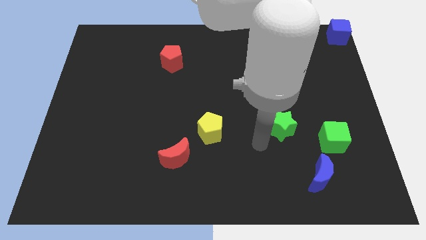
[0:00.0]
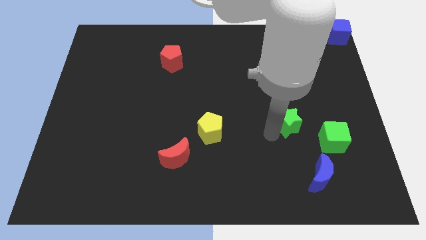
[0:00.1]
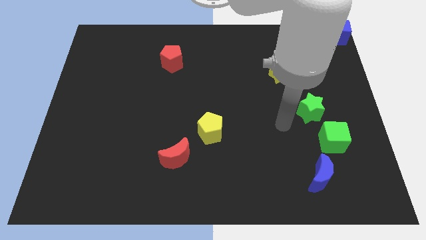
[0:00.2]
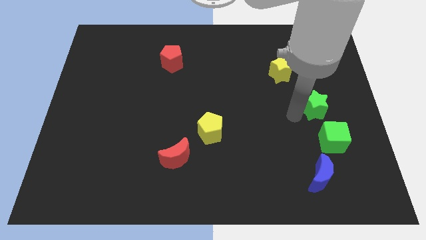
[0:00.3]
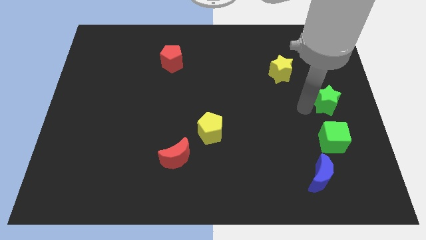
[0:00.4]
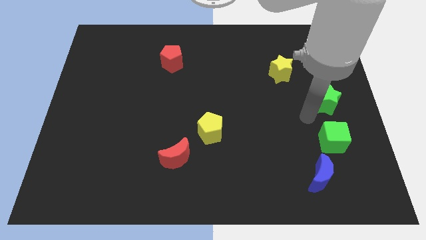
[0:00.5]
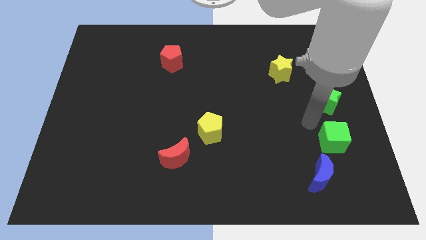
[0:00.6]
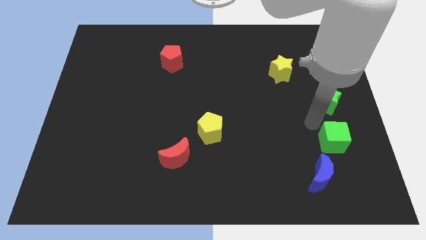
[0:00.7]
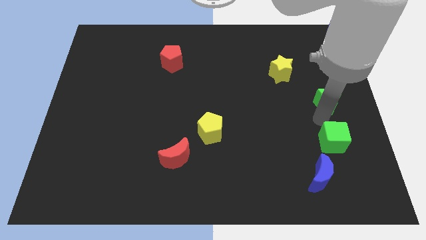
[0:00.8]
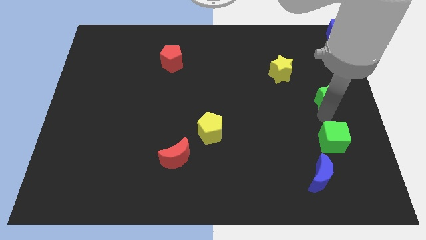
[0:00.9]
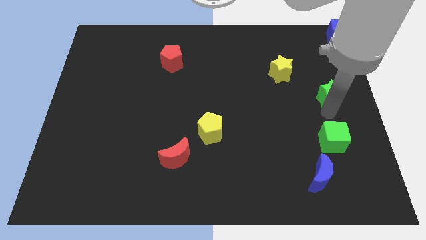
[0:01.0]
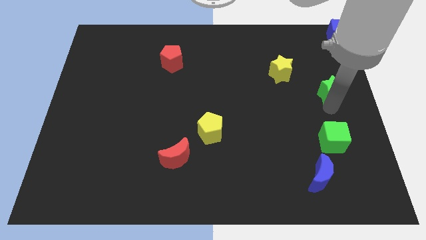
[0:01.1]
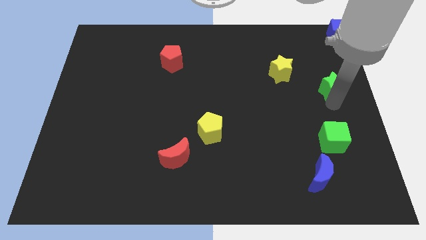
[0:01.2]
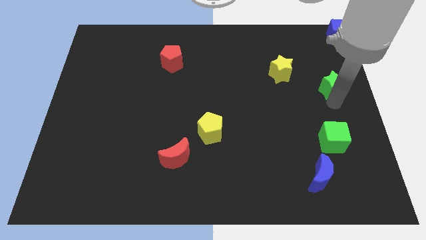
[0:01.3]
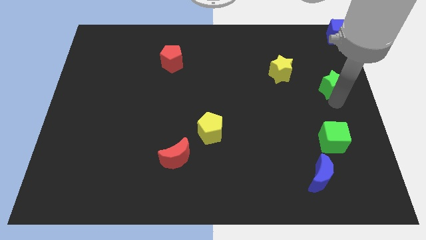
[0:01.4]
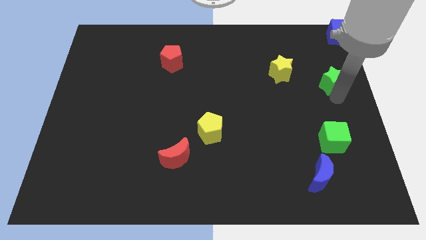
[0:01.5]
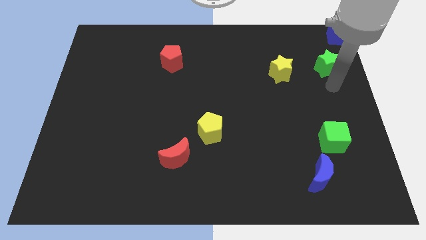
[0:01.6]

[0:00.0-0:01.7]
push the green star to the right side of the yellow star

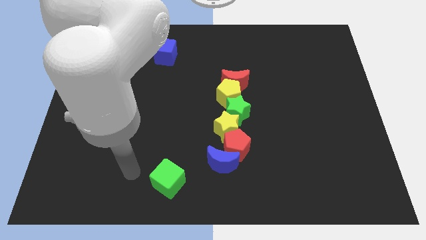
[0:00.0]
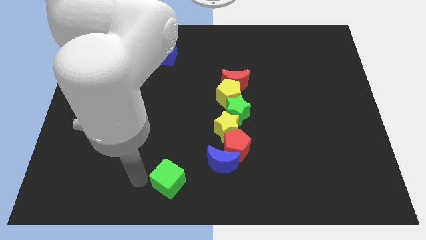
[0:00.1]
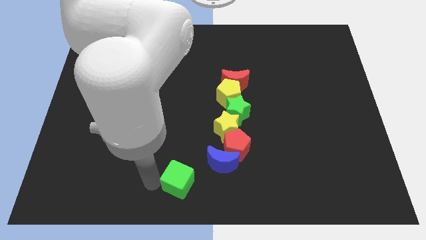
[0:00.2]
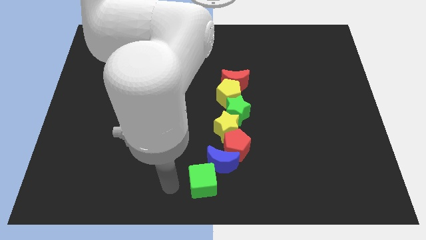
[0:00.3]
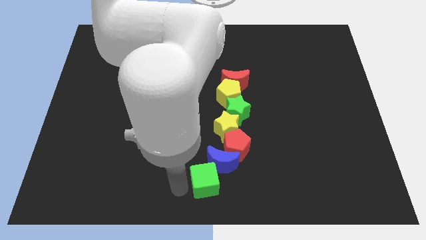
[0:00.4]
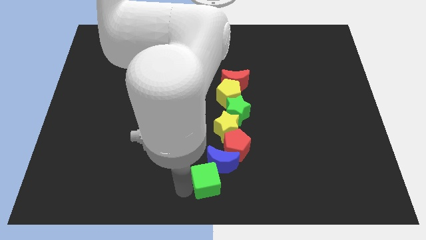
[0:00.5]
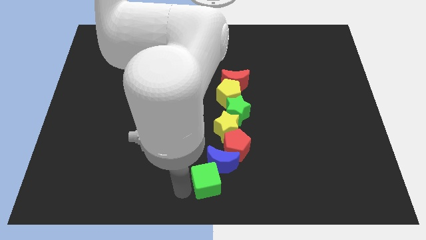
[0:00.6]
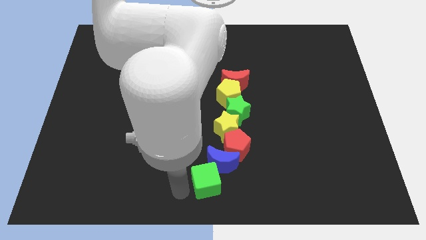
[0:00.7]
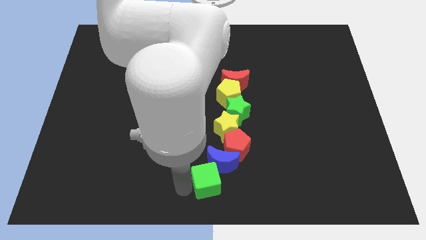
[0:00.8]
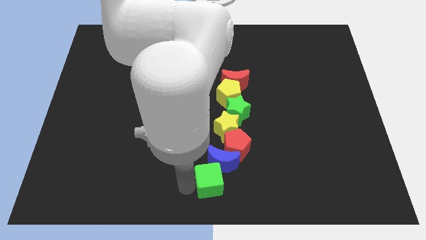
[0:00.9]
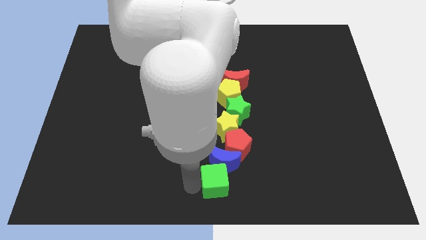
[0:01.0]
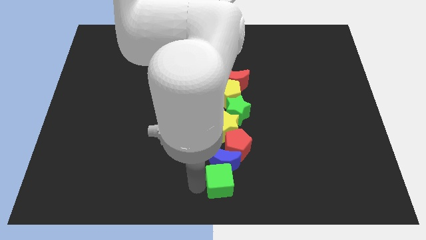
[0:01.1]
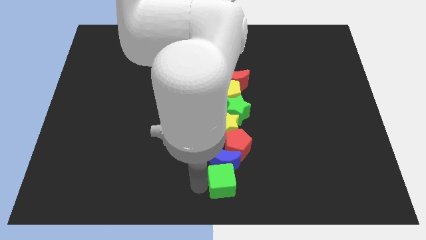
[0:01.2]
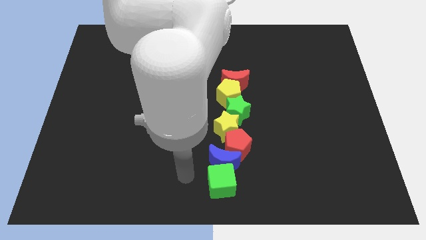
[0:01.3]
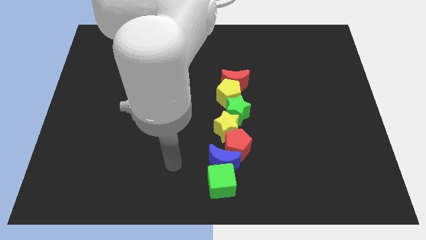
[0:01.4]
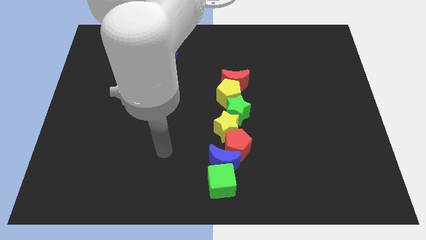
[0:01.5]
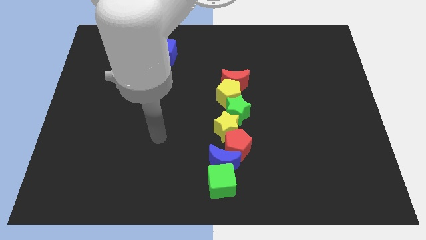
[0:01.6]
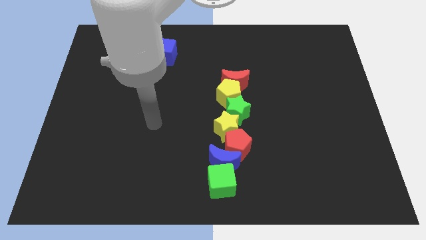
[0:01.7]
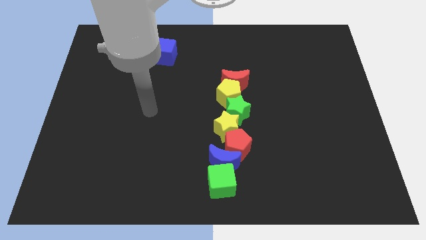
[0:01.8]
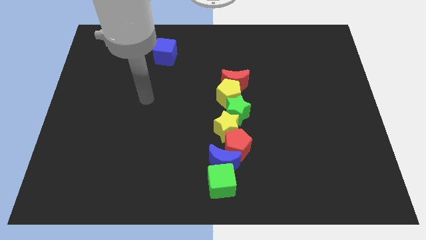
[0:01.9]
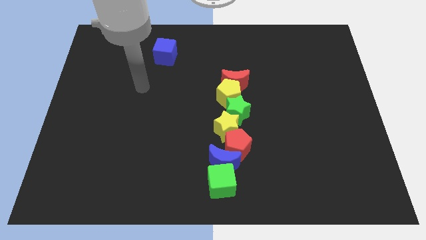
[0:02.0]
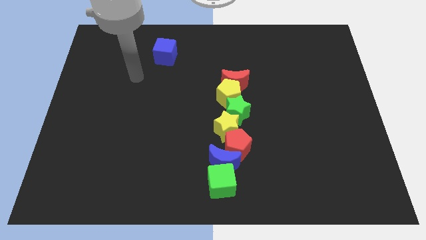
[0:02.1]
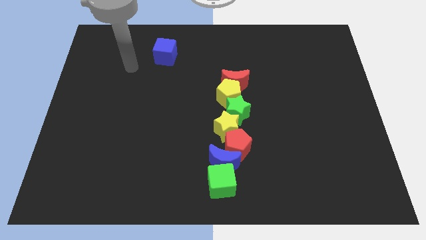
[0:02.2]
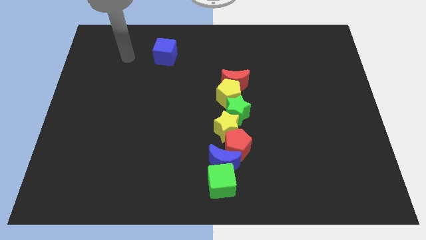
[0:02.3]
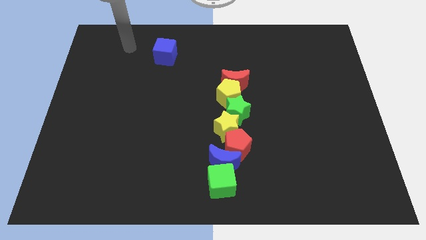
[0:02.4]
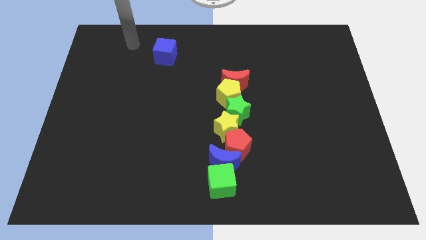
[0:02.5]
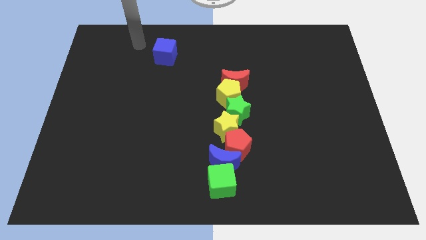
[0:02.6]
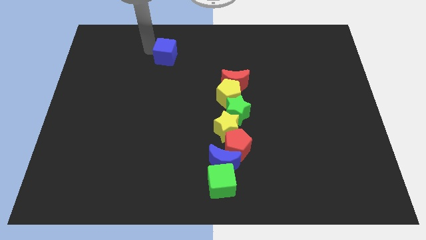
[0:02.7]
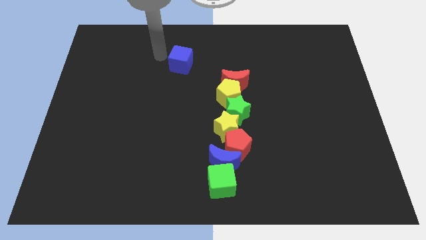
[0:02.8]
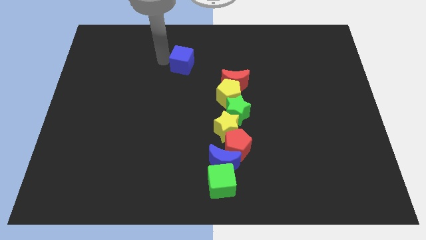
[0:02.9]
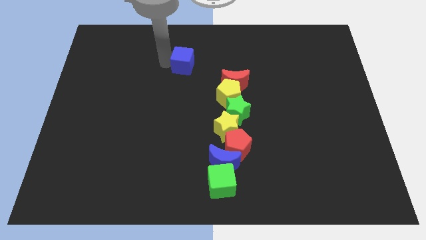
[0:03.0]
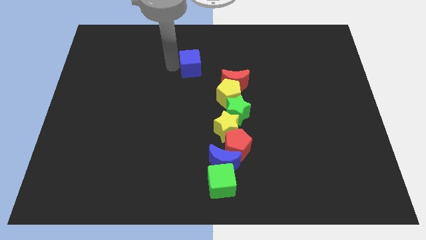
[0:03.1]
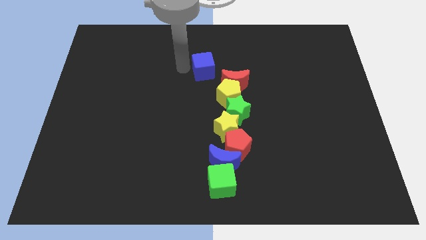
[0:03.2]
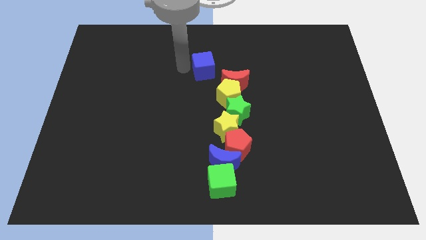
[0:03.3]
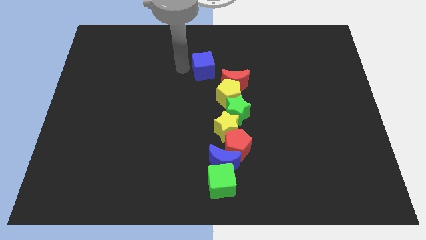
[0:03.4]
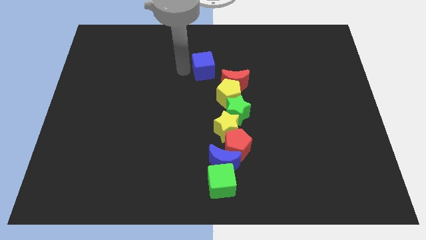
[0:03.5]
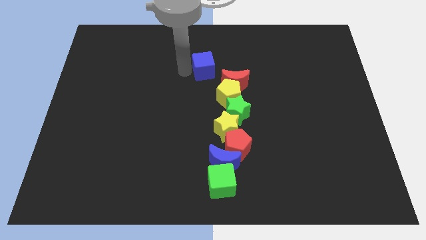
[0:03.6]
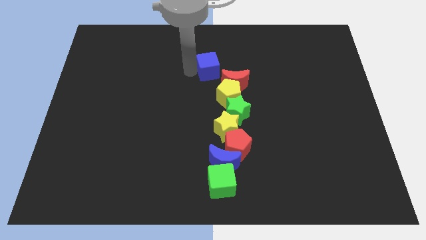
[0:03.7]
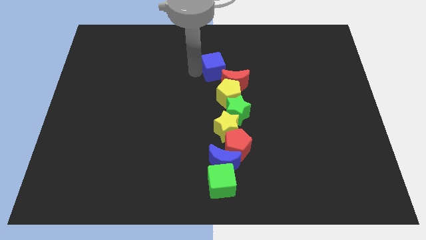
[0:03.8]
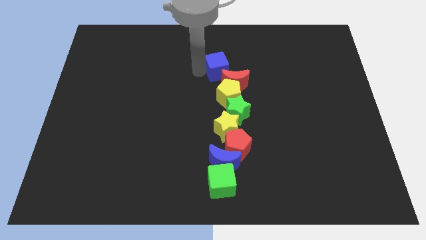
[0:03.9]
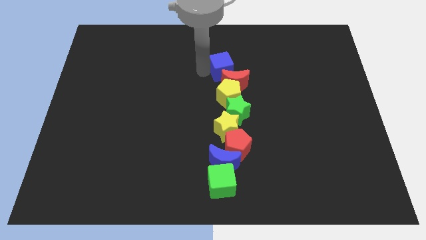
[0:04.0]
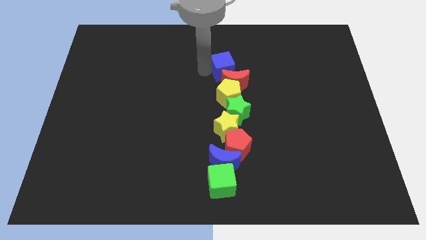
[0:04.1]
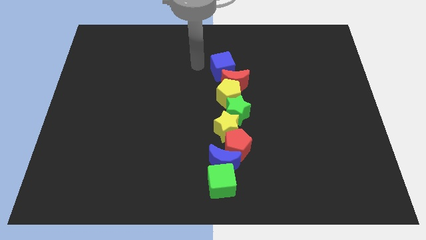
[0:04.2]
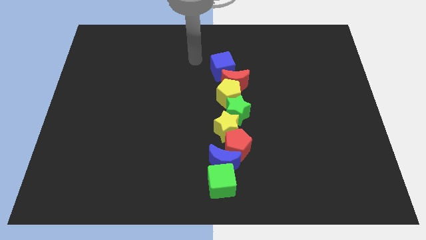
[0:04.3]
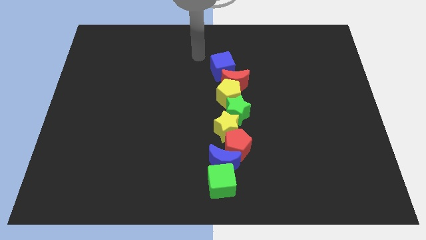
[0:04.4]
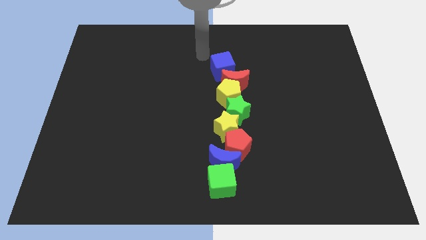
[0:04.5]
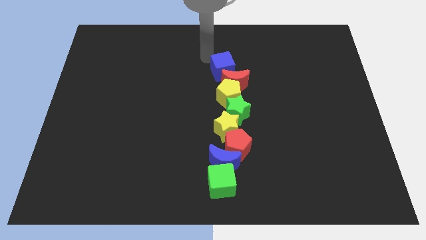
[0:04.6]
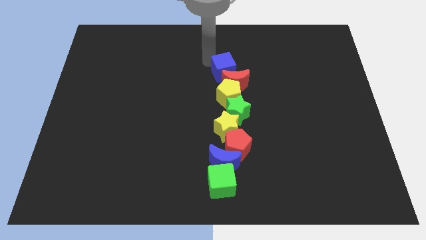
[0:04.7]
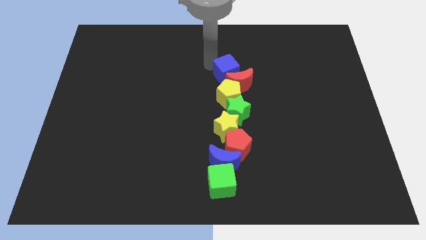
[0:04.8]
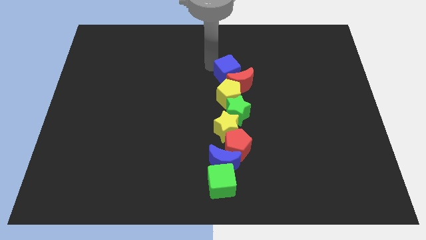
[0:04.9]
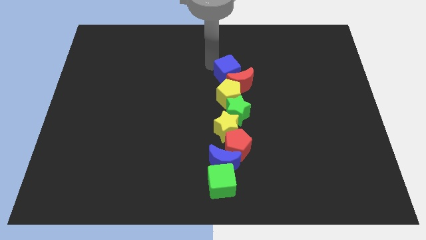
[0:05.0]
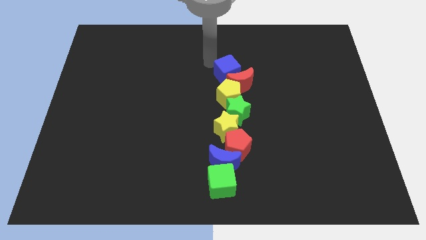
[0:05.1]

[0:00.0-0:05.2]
arrange all the blocks in a vertical line

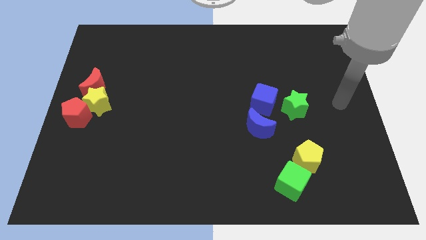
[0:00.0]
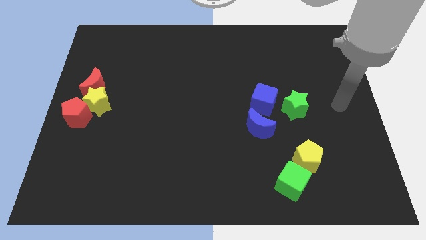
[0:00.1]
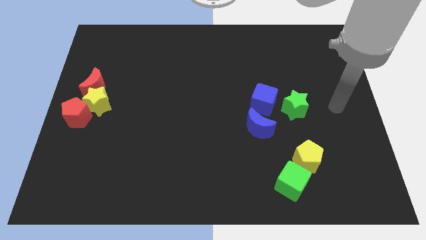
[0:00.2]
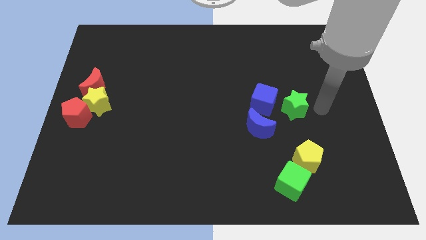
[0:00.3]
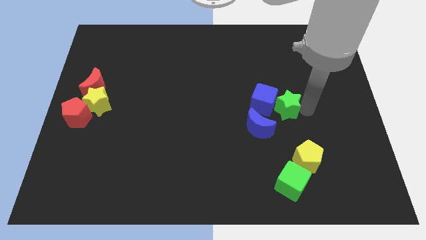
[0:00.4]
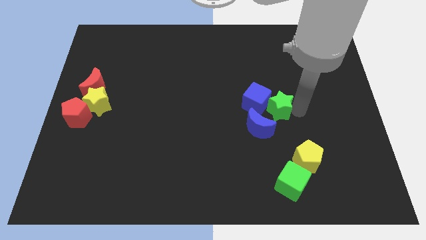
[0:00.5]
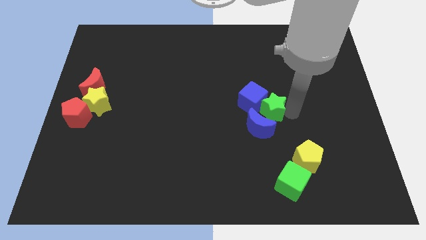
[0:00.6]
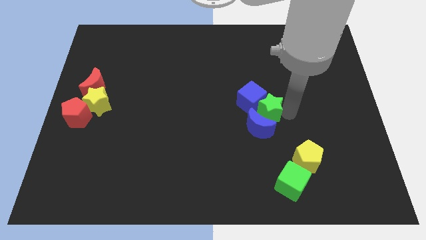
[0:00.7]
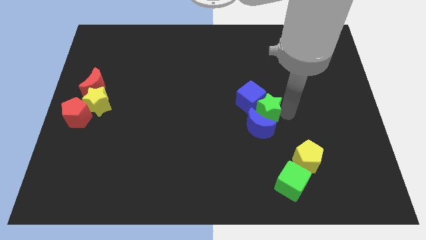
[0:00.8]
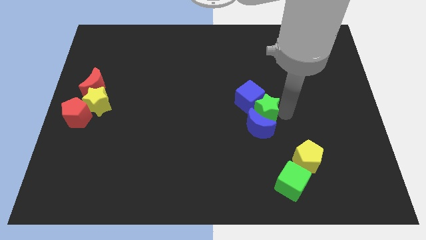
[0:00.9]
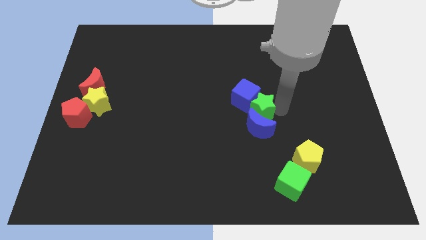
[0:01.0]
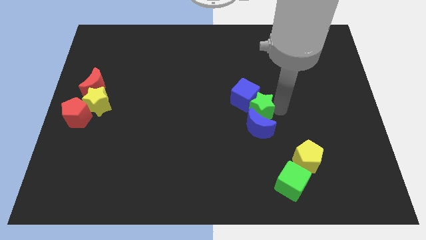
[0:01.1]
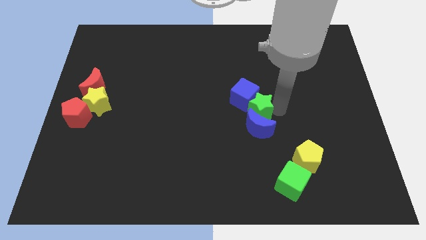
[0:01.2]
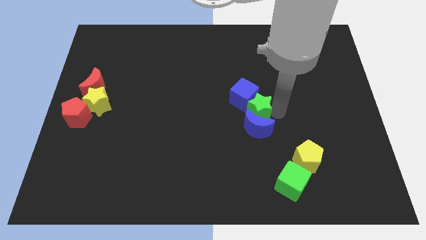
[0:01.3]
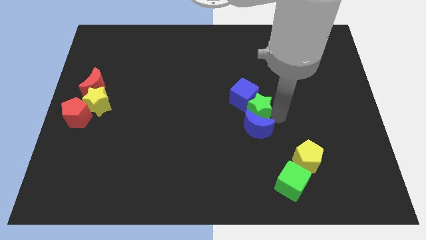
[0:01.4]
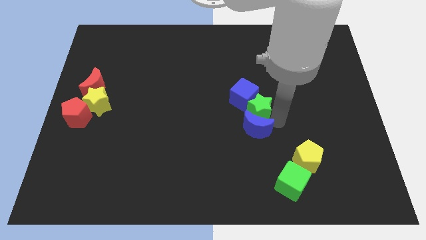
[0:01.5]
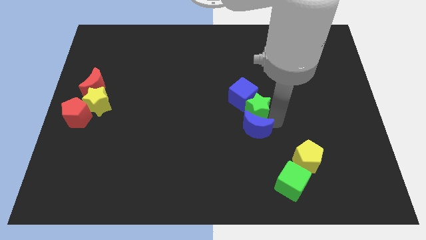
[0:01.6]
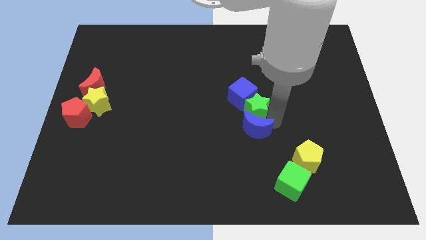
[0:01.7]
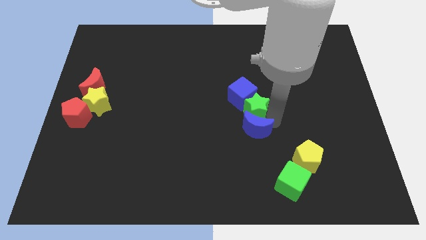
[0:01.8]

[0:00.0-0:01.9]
move the green star to the right of the blue cube

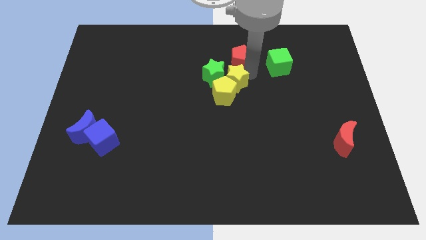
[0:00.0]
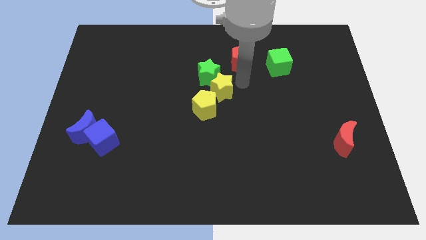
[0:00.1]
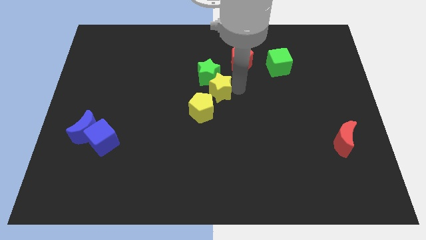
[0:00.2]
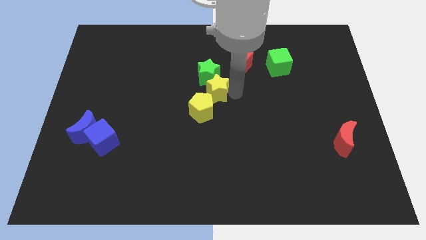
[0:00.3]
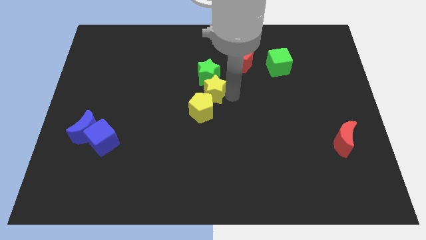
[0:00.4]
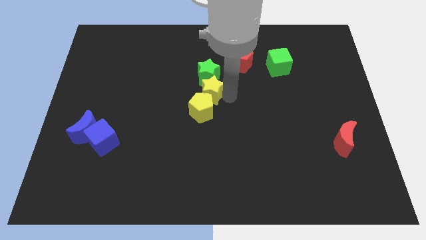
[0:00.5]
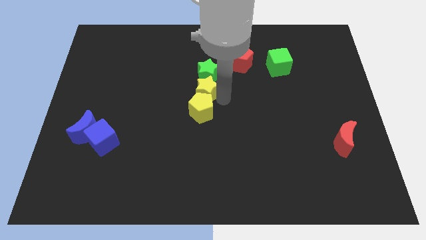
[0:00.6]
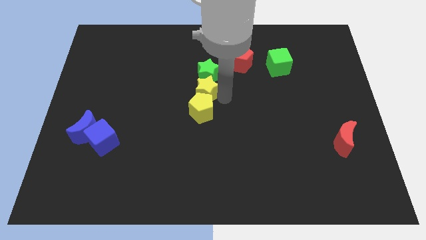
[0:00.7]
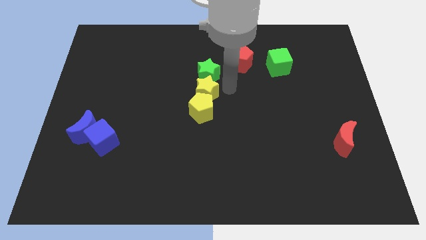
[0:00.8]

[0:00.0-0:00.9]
move the yellow star in between the green star and yellow pentagon
